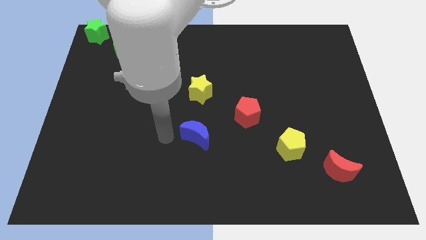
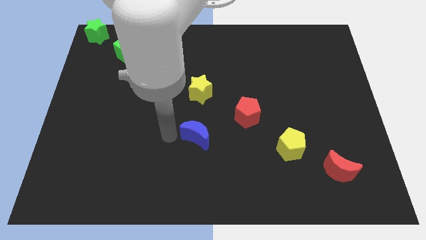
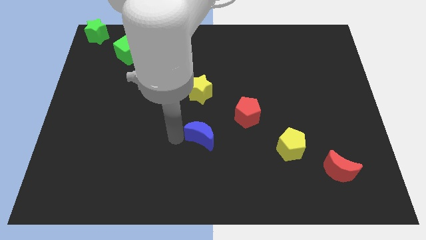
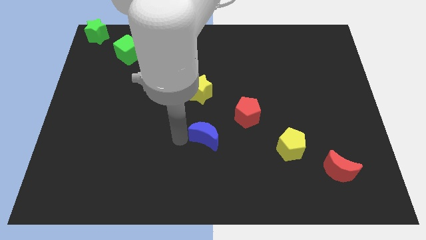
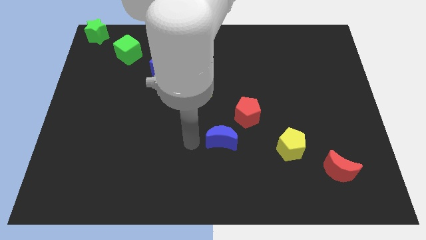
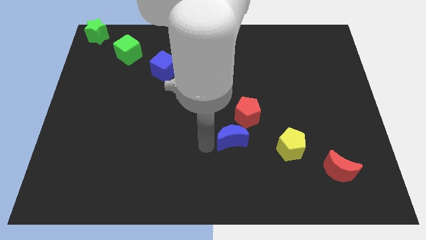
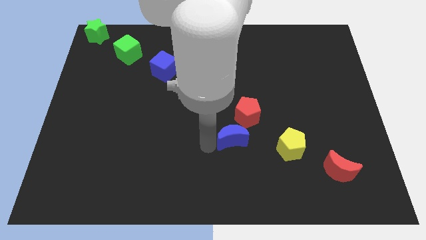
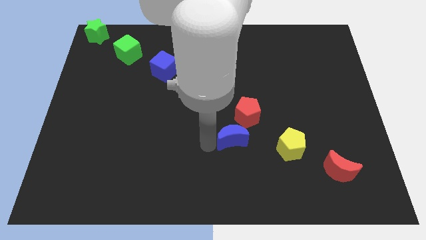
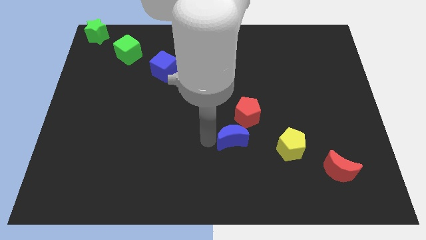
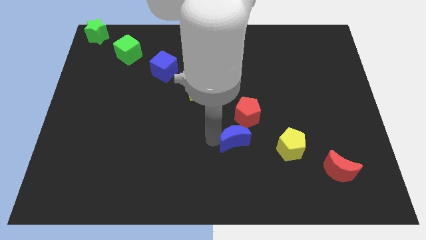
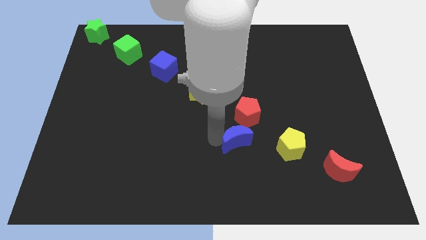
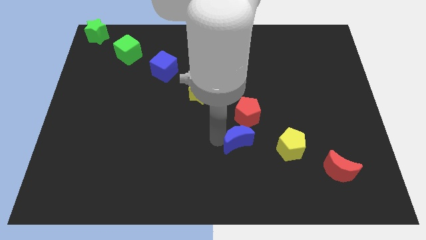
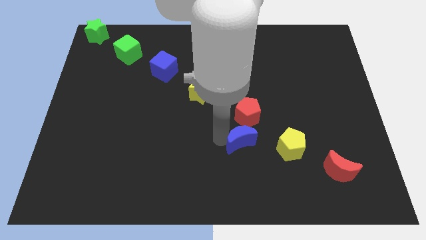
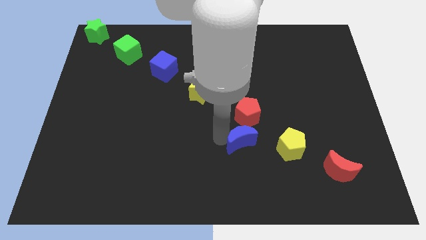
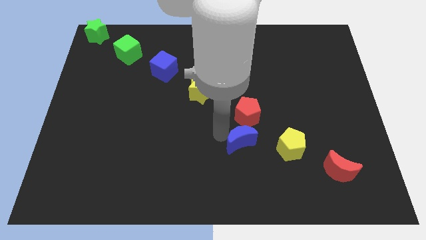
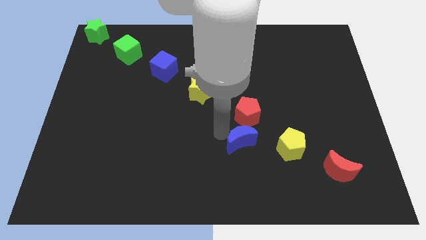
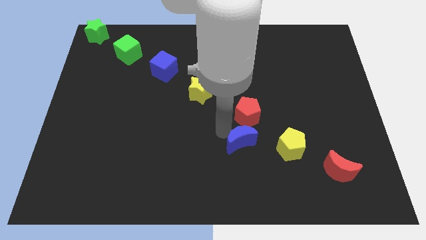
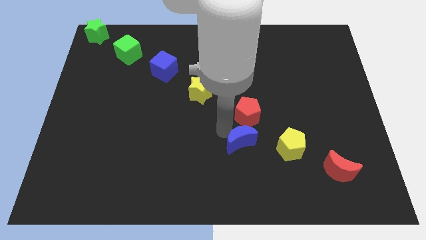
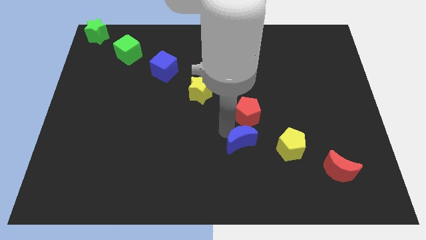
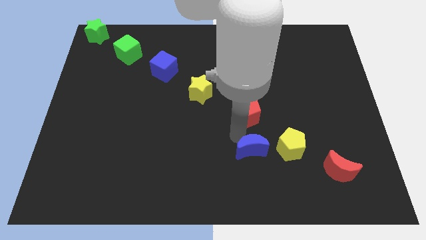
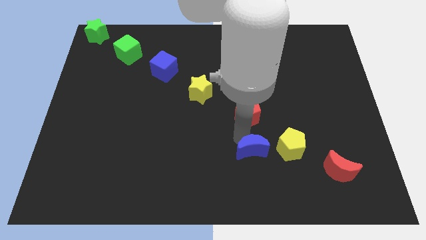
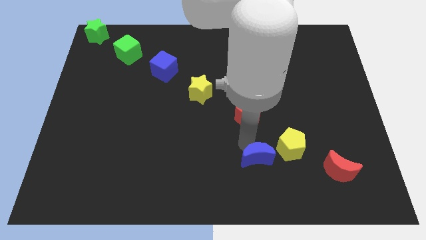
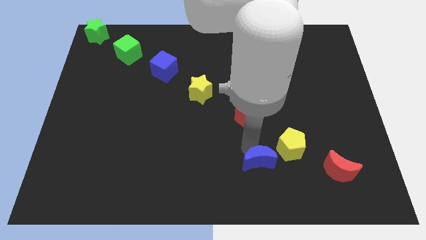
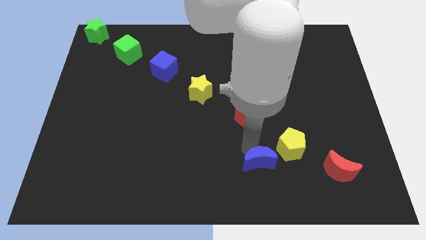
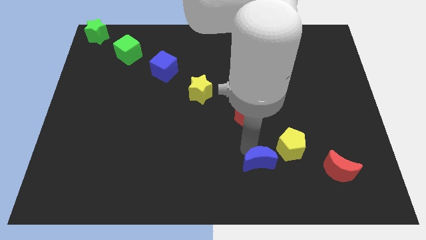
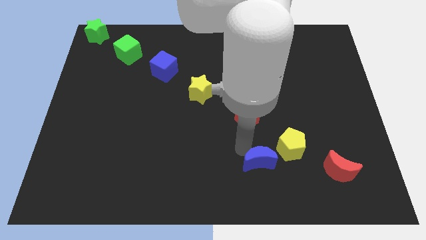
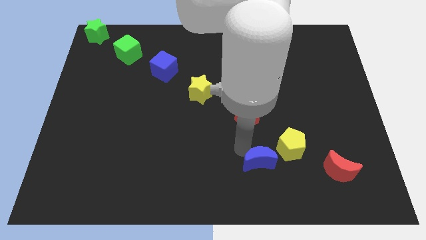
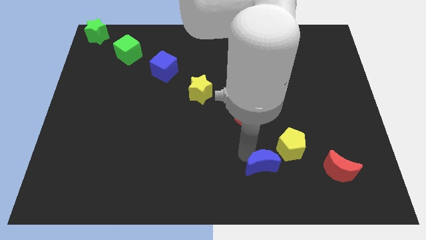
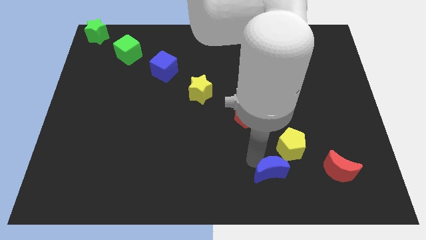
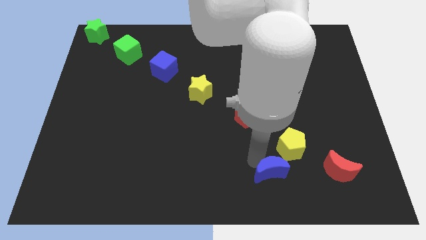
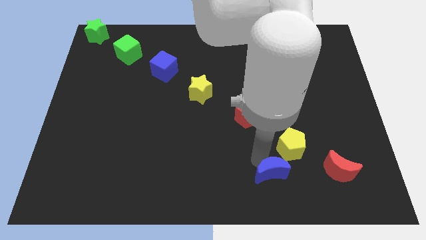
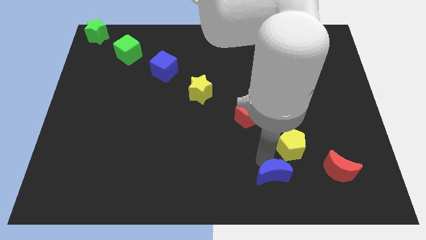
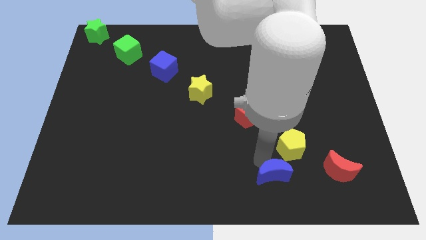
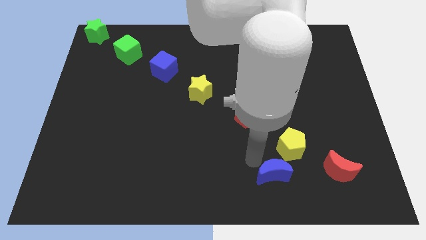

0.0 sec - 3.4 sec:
move the blue moon to the bottom left of the yellow pentagon

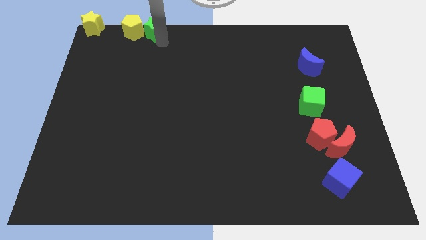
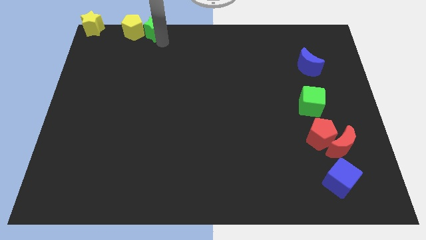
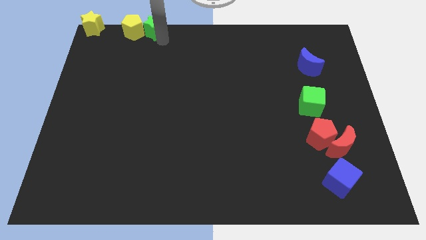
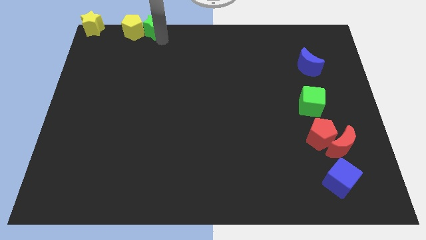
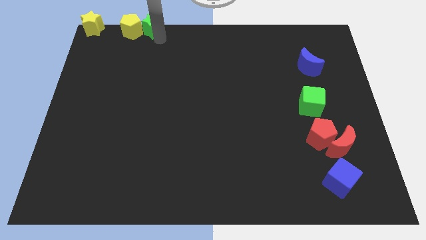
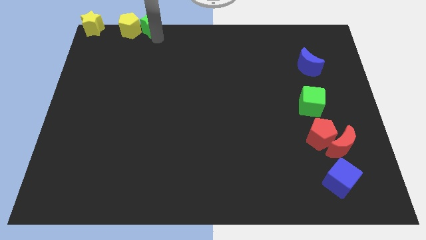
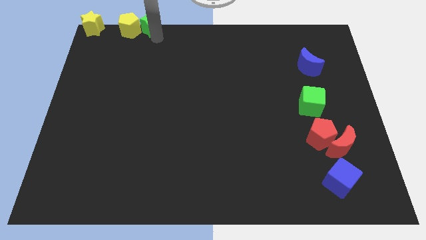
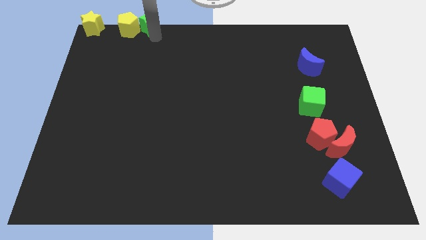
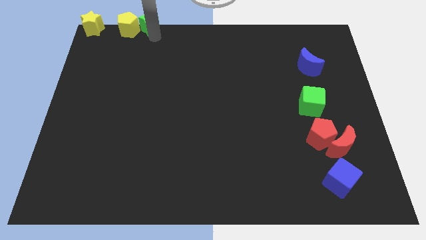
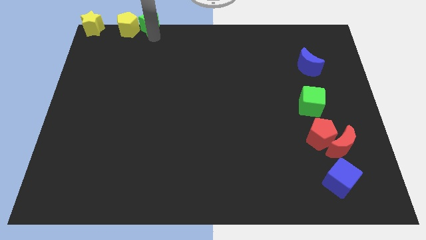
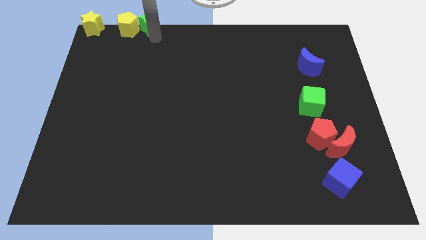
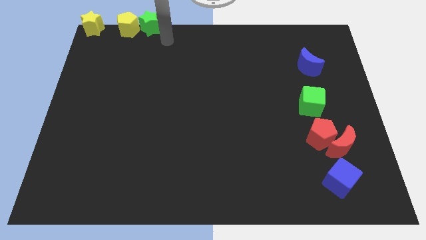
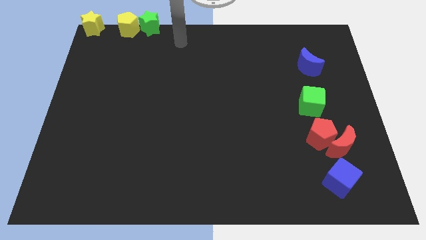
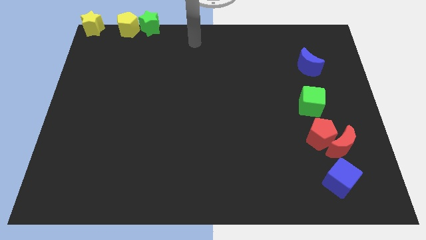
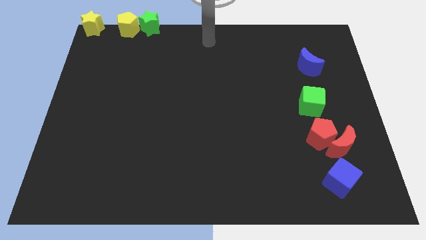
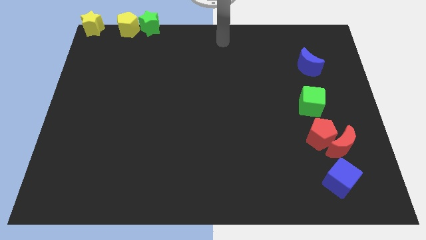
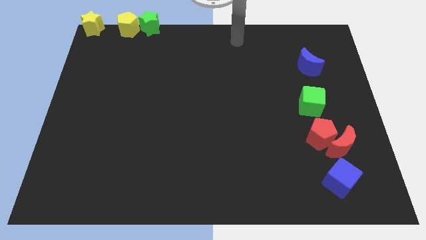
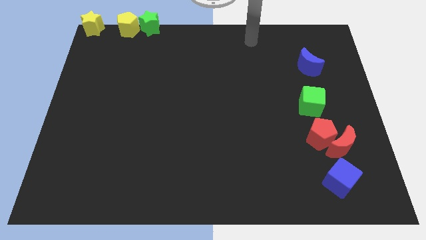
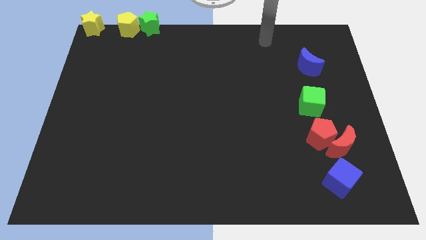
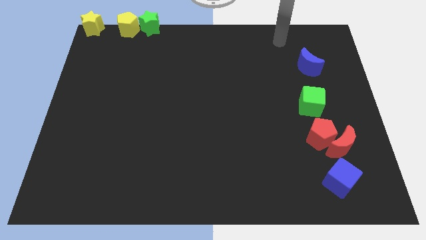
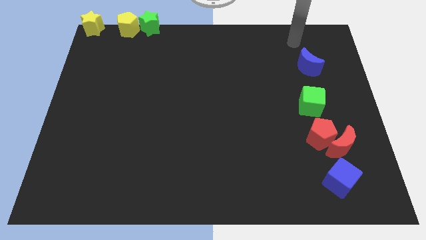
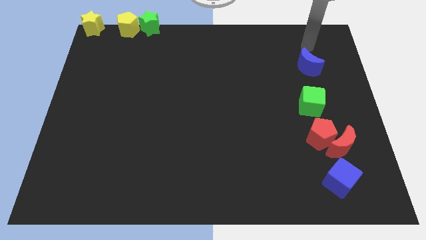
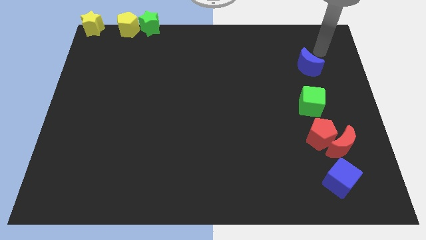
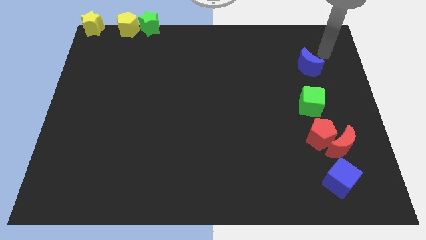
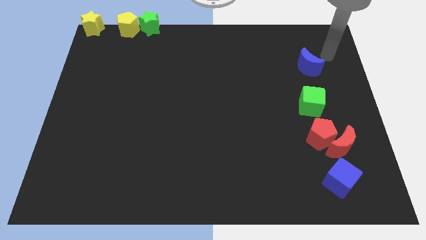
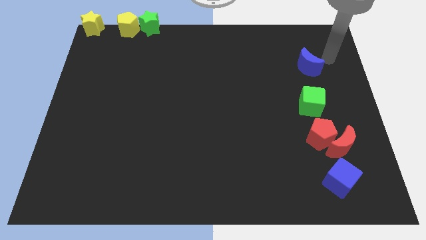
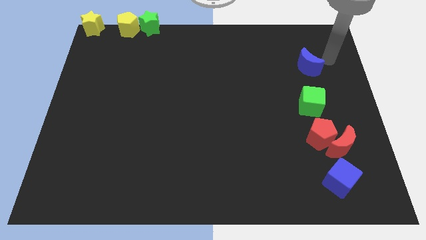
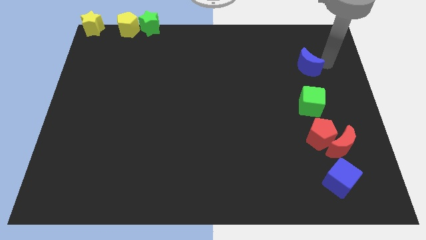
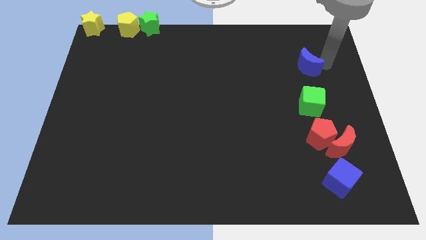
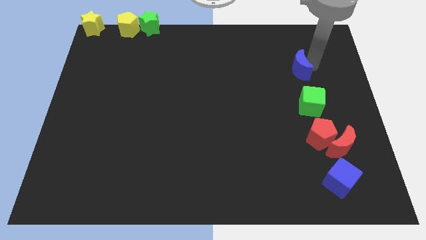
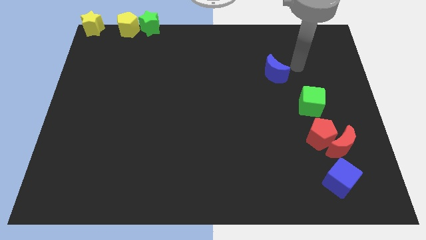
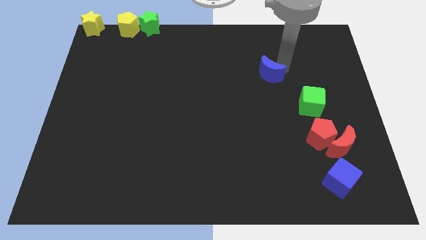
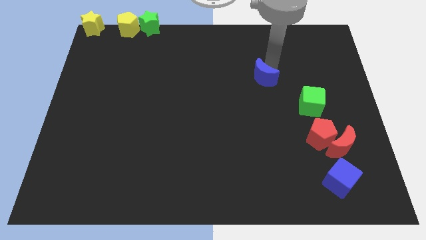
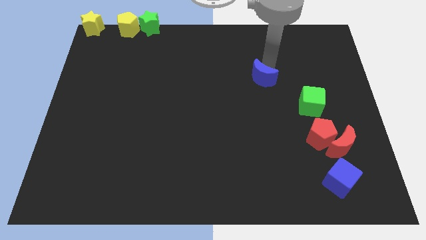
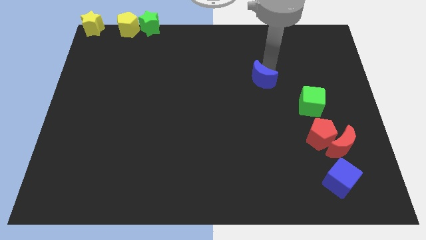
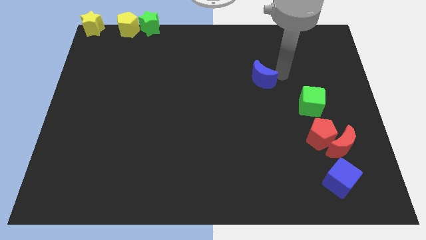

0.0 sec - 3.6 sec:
move the blue moon diagonal top left to green cube

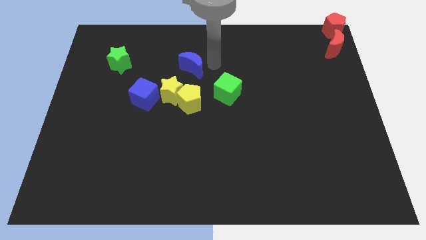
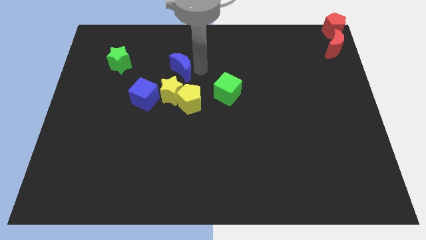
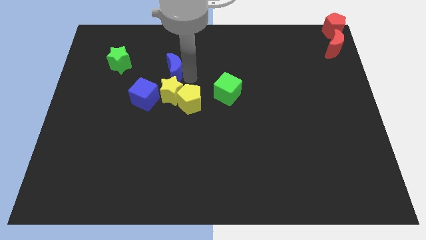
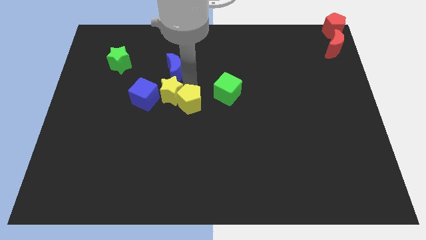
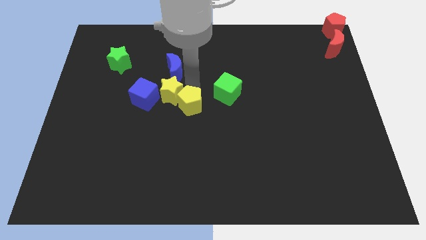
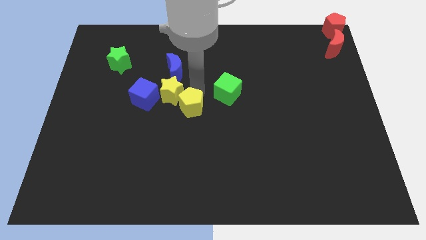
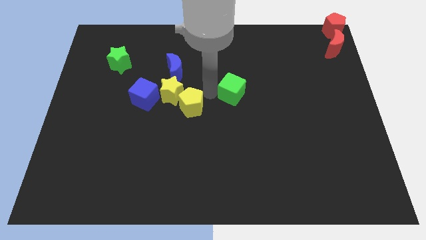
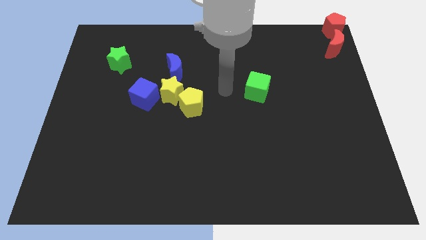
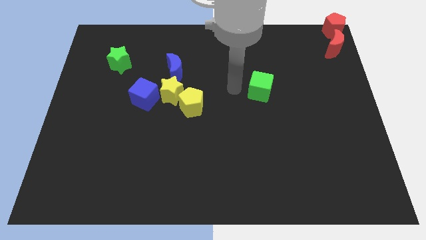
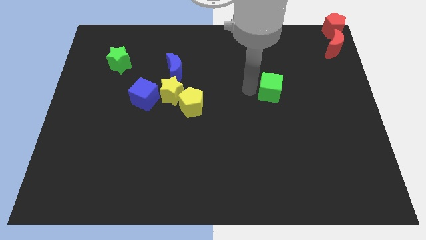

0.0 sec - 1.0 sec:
place the blue moon above the yellow star

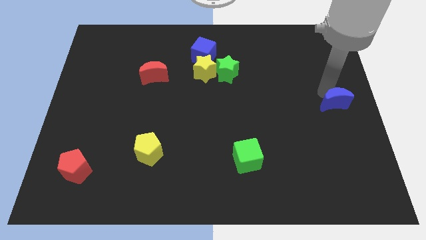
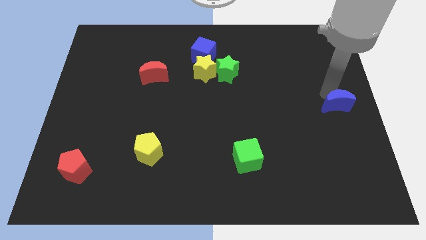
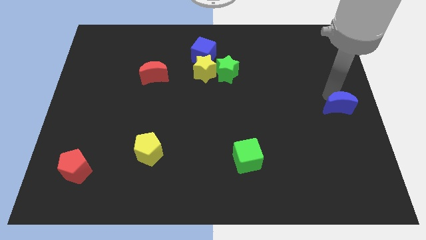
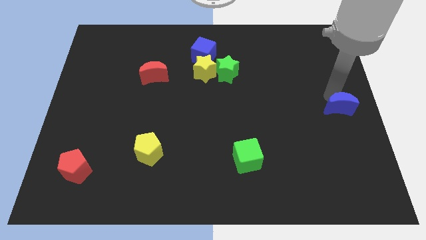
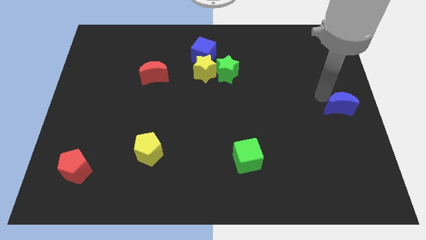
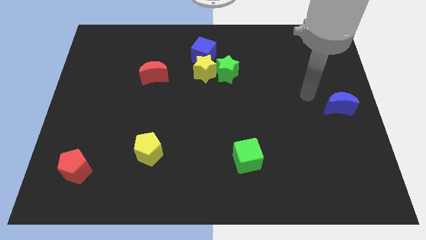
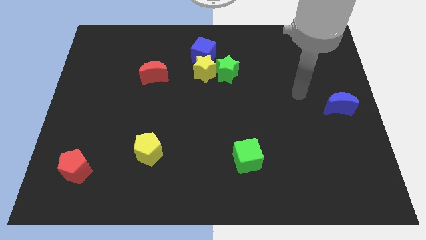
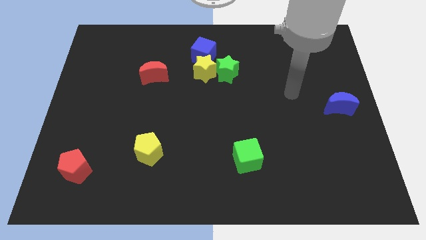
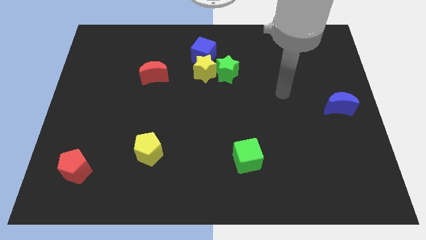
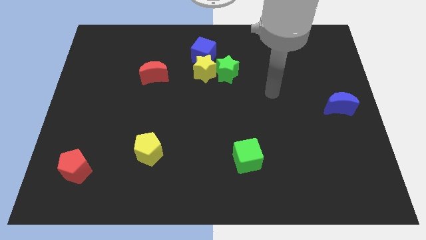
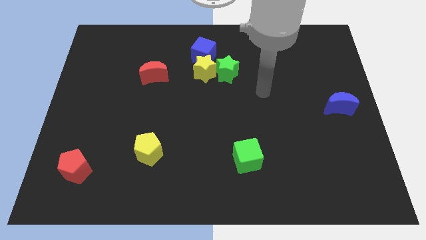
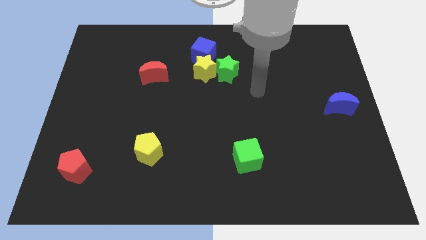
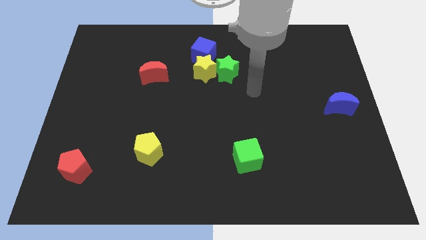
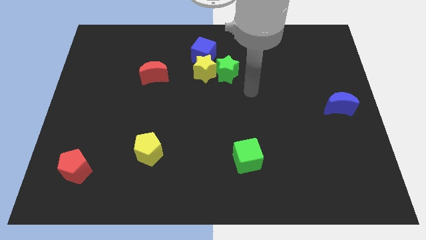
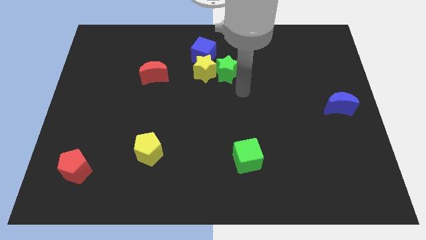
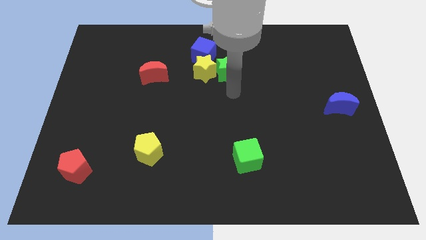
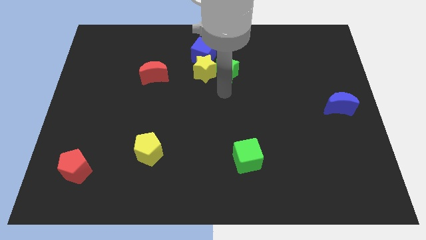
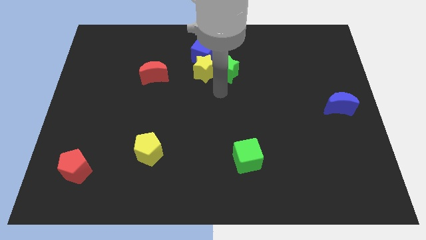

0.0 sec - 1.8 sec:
place the arm below the green star
